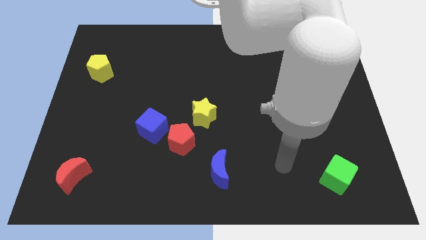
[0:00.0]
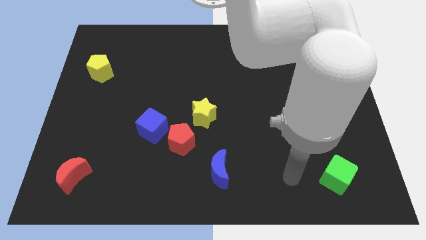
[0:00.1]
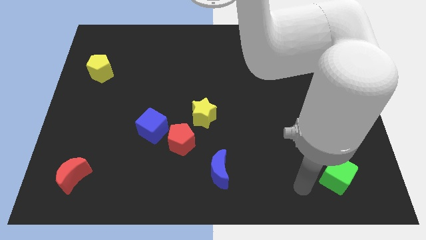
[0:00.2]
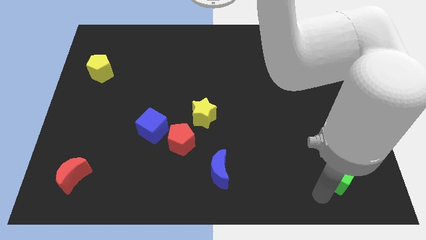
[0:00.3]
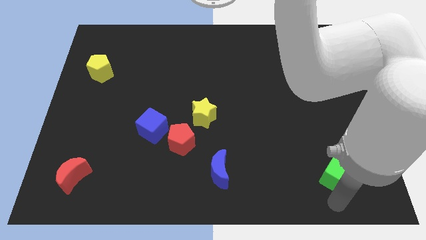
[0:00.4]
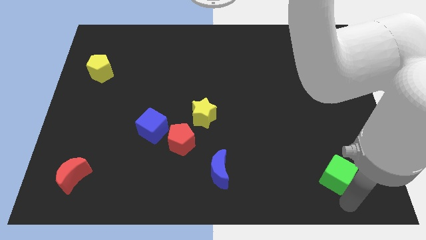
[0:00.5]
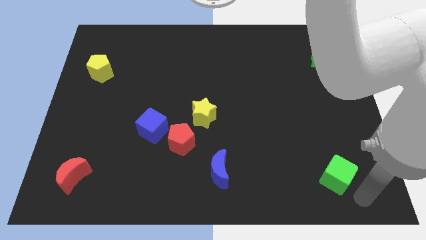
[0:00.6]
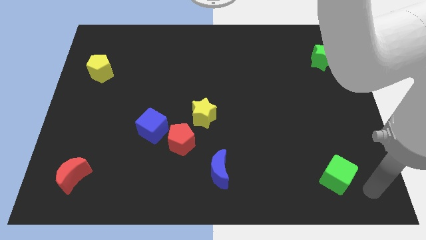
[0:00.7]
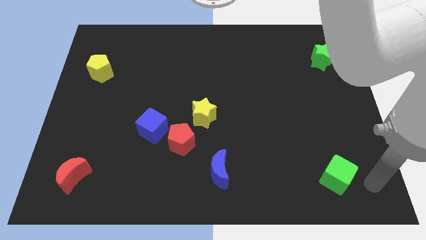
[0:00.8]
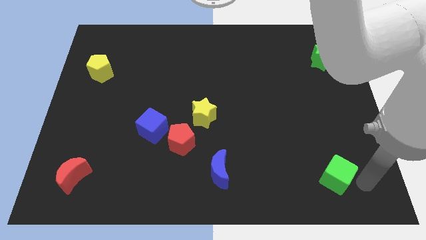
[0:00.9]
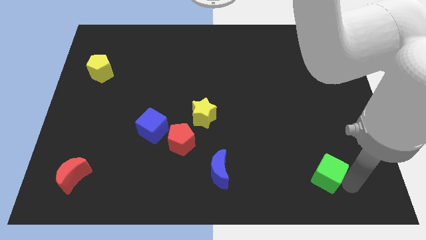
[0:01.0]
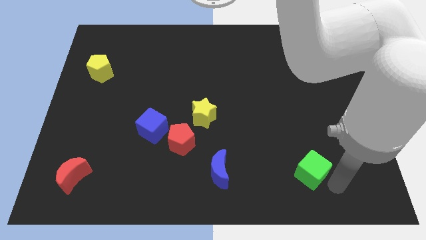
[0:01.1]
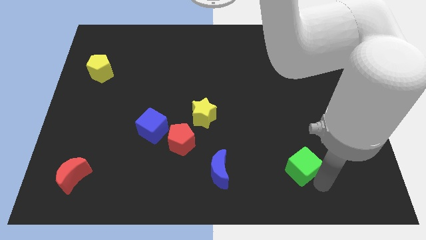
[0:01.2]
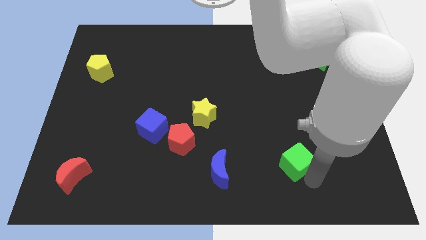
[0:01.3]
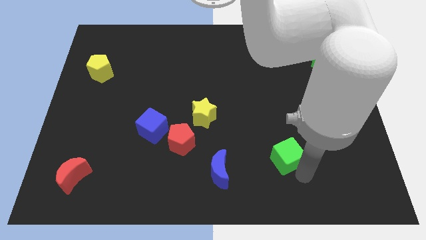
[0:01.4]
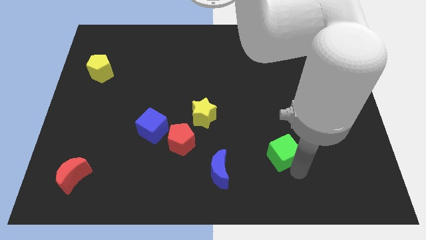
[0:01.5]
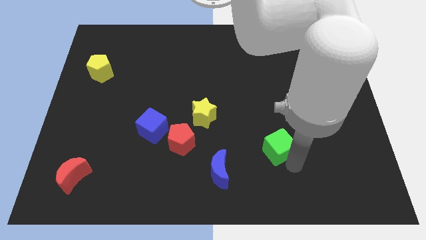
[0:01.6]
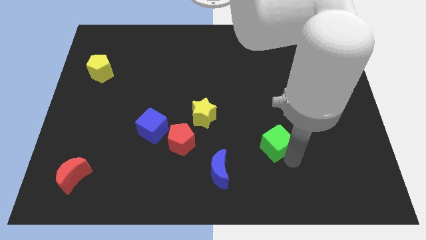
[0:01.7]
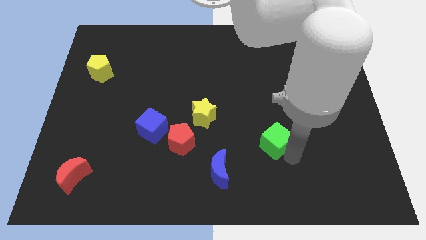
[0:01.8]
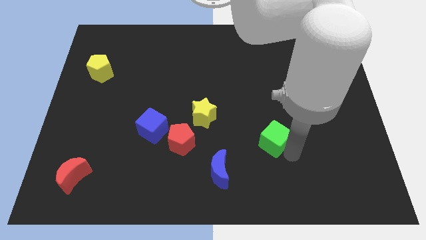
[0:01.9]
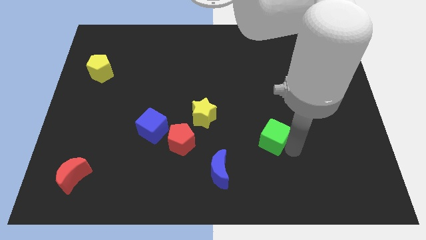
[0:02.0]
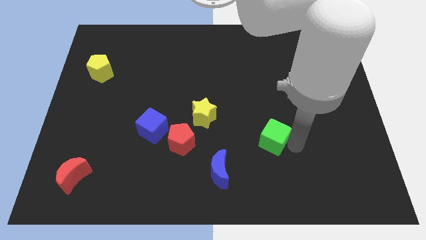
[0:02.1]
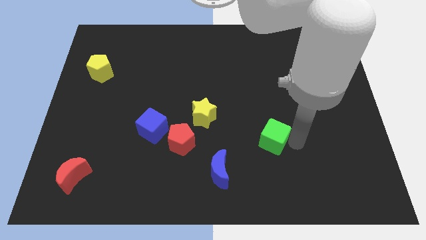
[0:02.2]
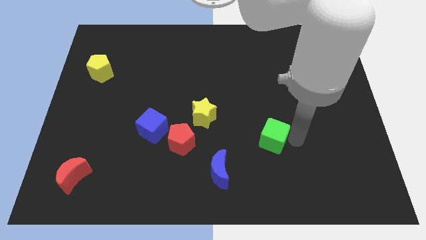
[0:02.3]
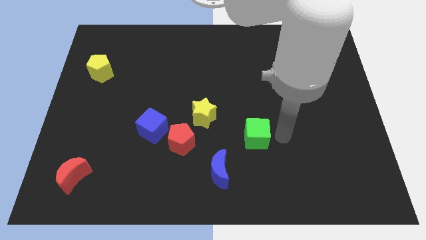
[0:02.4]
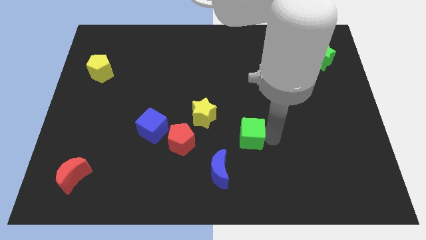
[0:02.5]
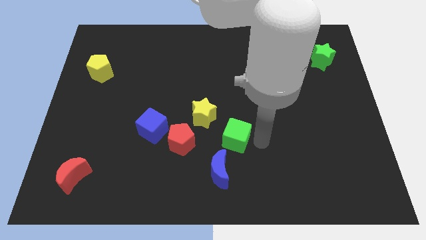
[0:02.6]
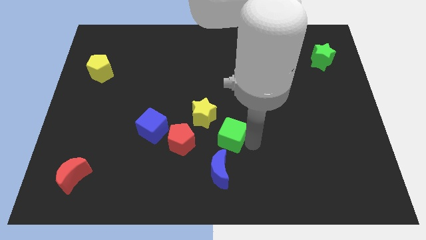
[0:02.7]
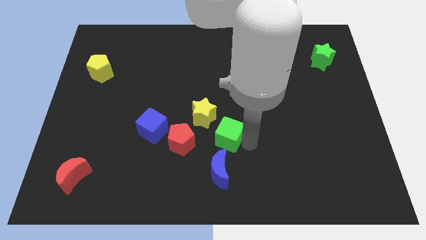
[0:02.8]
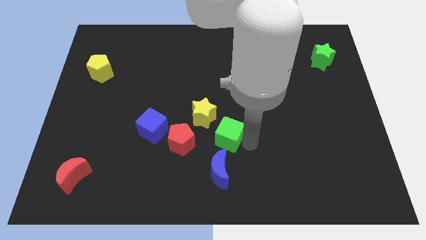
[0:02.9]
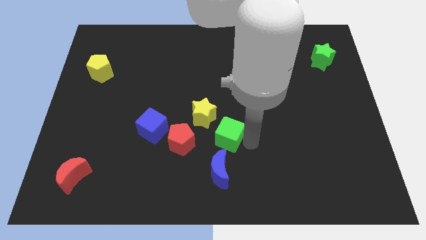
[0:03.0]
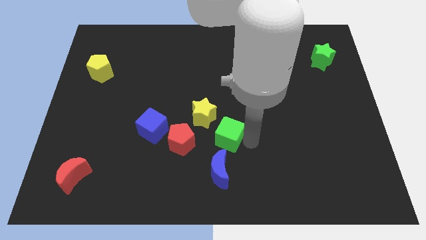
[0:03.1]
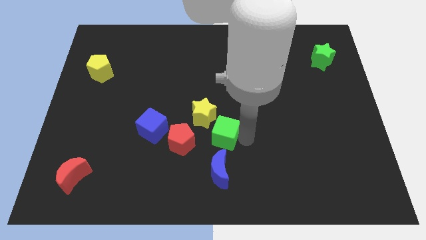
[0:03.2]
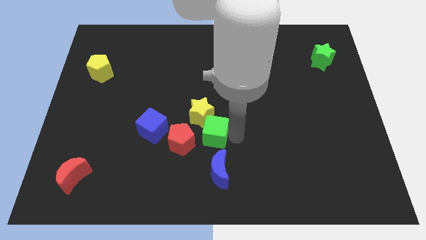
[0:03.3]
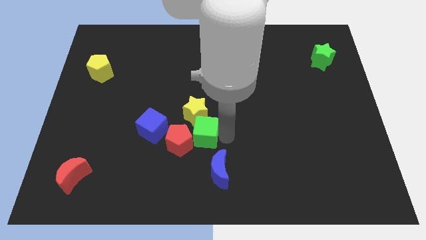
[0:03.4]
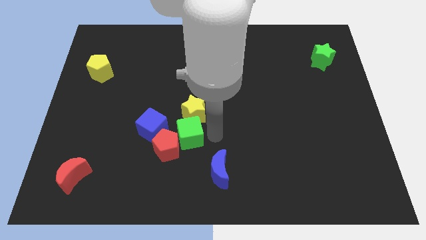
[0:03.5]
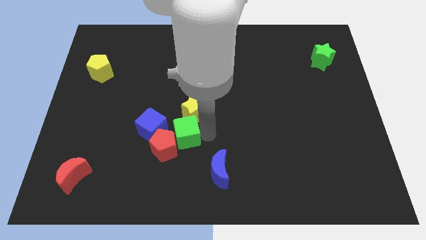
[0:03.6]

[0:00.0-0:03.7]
move the green cube towards the red pentagon

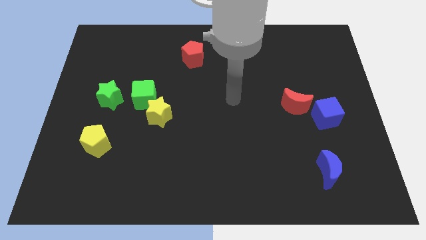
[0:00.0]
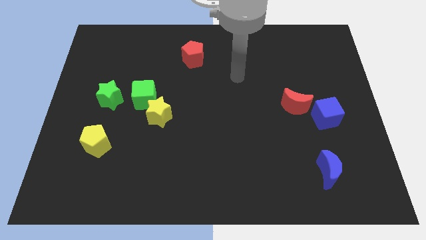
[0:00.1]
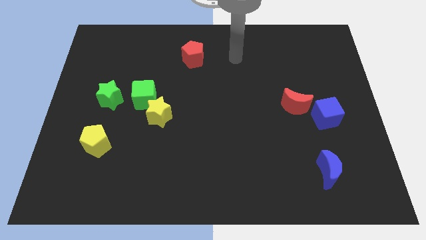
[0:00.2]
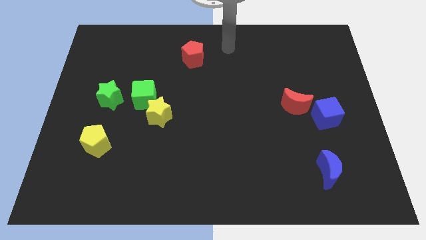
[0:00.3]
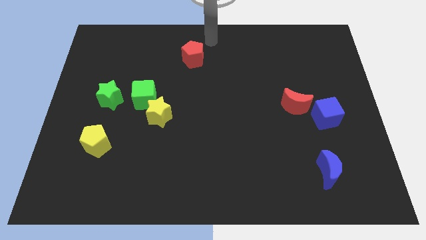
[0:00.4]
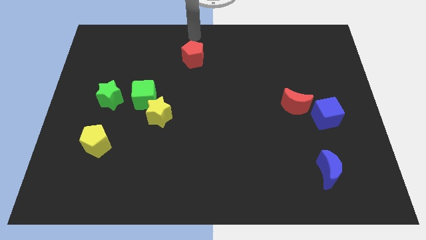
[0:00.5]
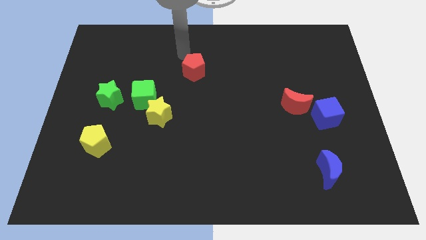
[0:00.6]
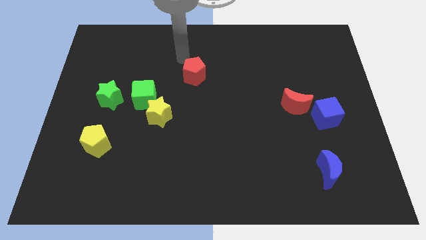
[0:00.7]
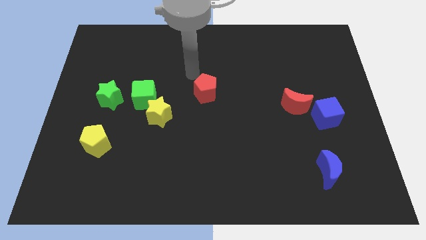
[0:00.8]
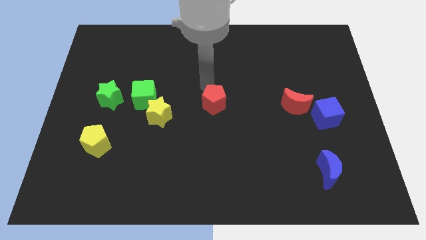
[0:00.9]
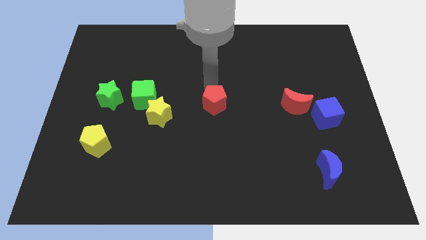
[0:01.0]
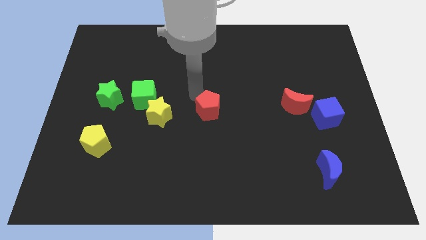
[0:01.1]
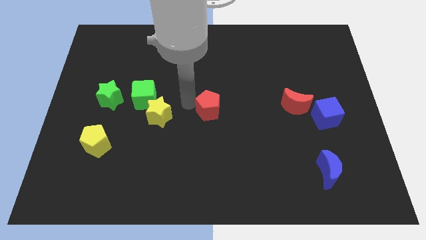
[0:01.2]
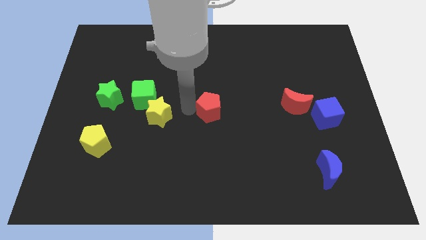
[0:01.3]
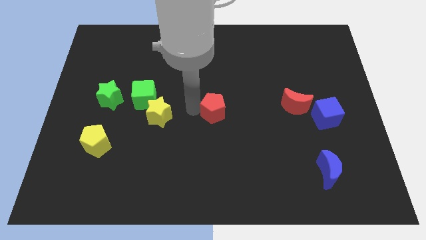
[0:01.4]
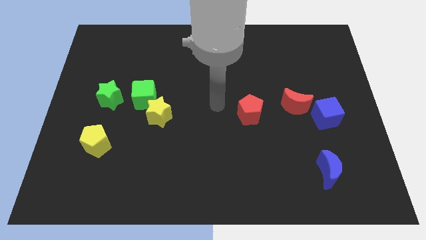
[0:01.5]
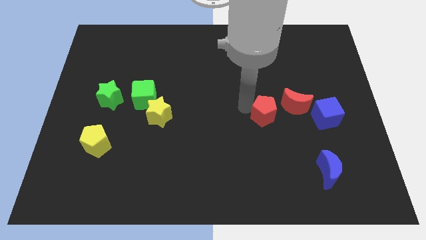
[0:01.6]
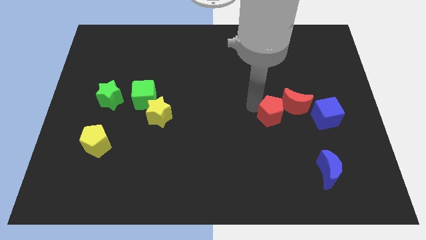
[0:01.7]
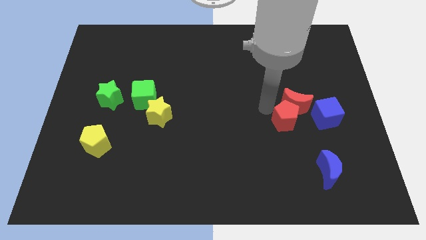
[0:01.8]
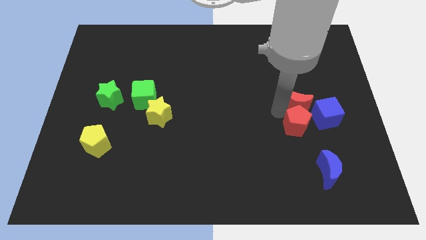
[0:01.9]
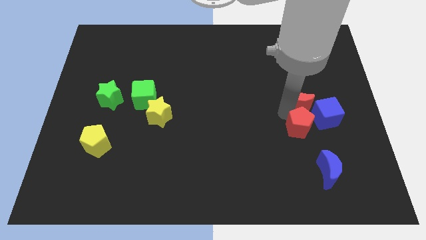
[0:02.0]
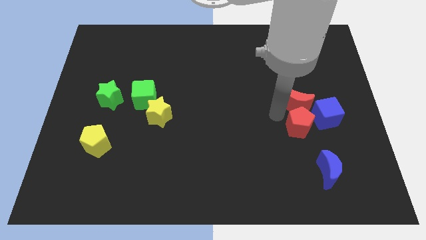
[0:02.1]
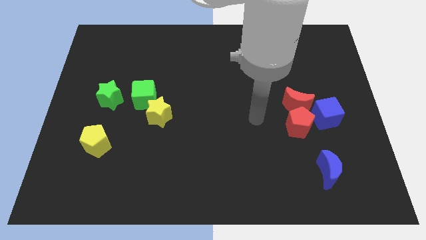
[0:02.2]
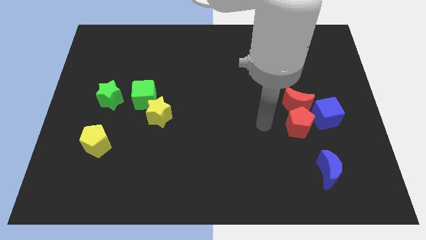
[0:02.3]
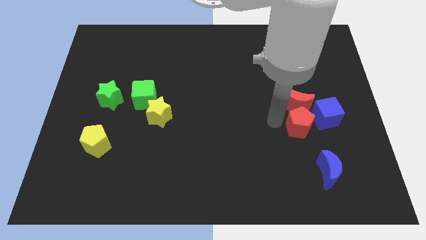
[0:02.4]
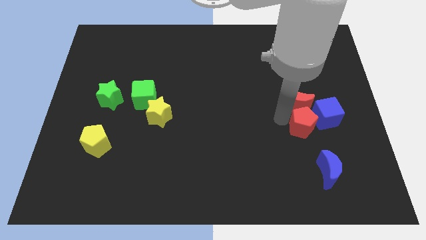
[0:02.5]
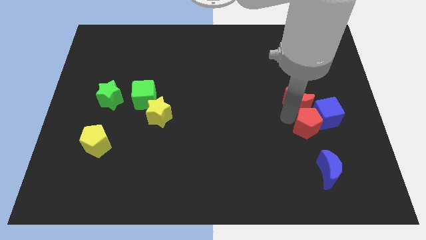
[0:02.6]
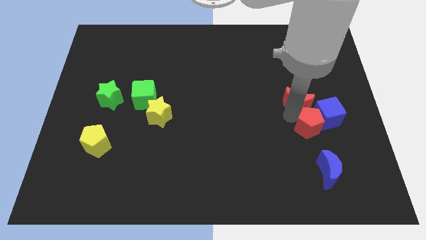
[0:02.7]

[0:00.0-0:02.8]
slide the red pentagon to the blue cube

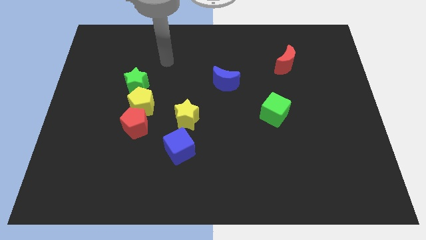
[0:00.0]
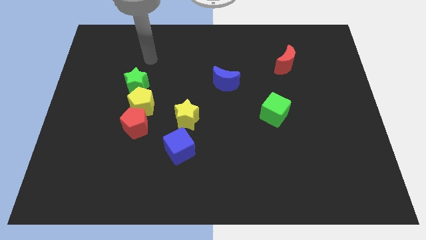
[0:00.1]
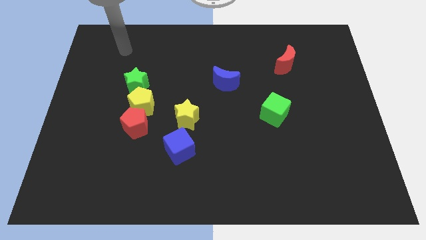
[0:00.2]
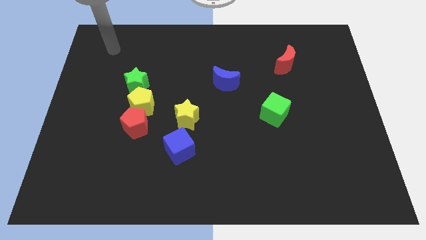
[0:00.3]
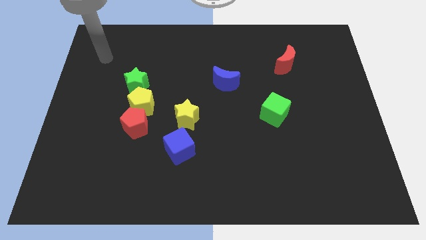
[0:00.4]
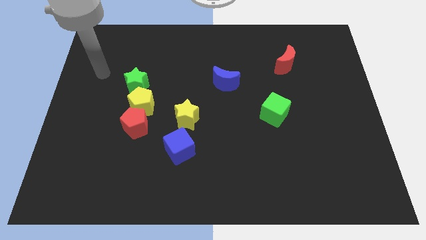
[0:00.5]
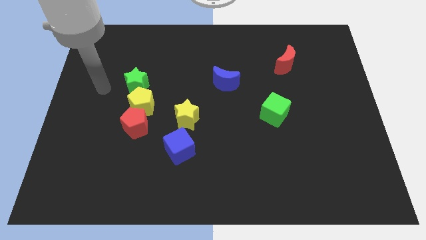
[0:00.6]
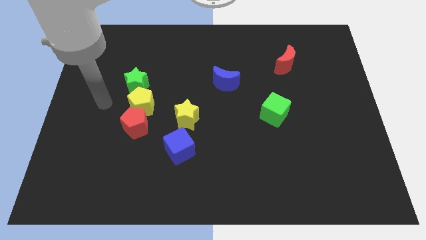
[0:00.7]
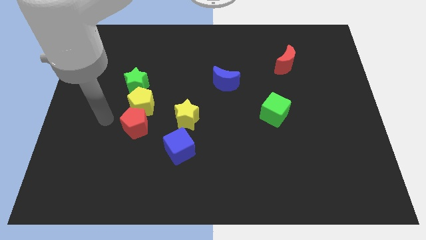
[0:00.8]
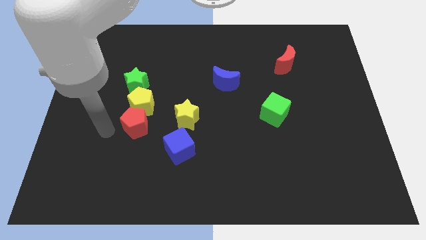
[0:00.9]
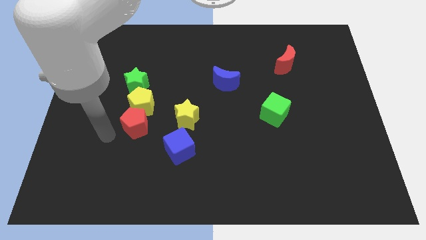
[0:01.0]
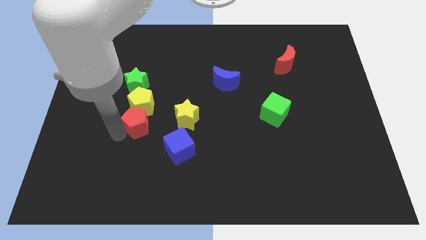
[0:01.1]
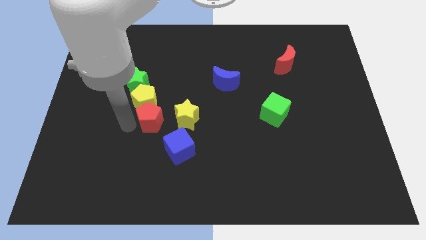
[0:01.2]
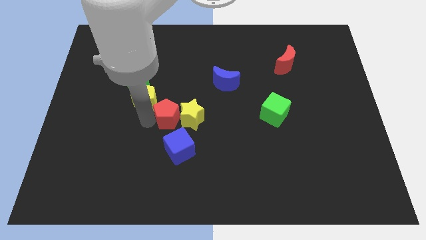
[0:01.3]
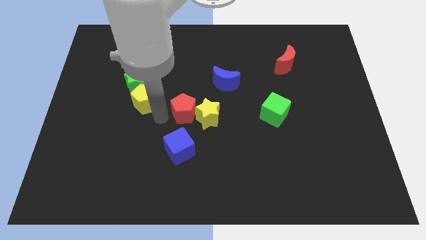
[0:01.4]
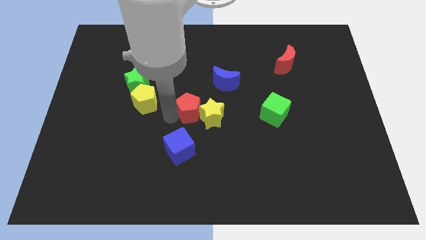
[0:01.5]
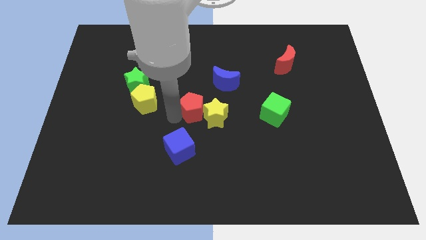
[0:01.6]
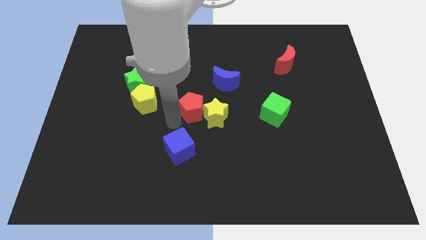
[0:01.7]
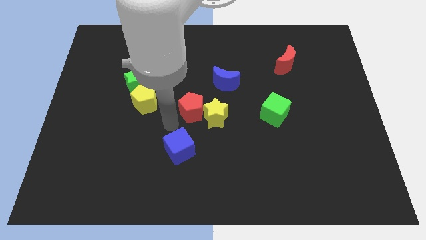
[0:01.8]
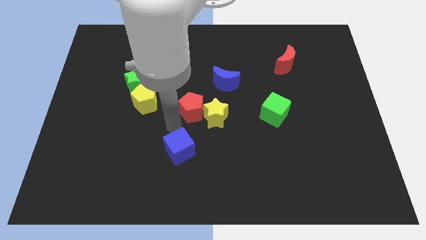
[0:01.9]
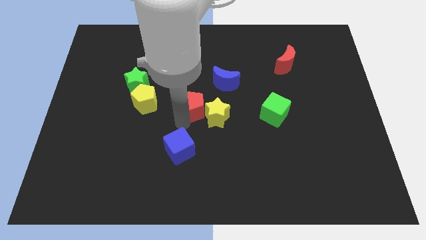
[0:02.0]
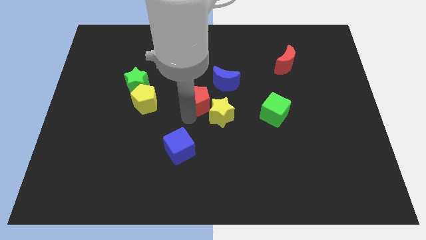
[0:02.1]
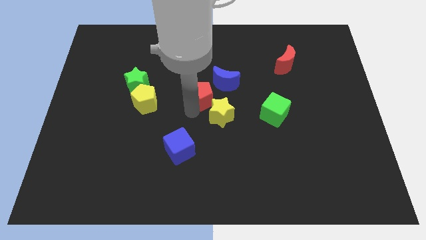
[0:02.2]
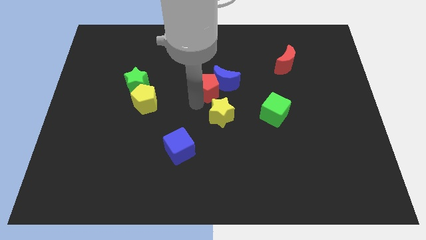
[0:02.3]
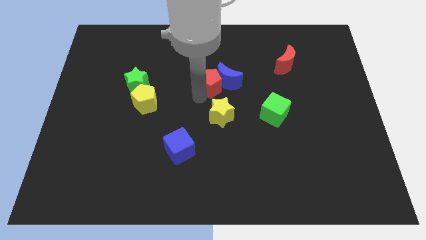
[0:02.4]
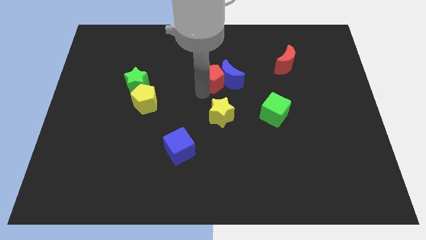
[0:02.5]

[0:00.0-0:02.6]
put the red pentagon towards the blue moon
